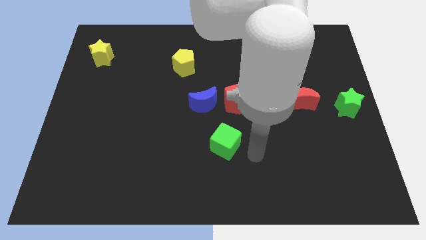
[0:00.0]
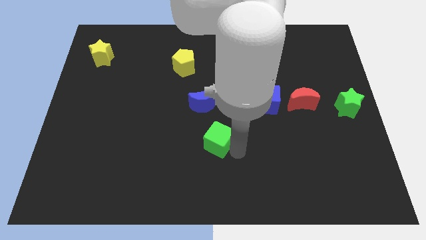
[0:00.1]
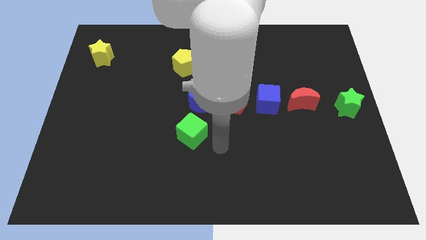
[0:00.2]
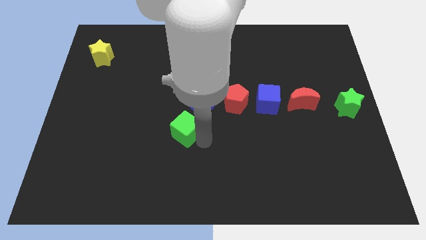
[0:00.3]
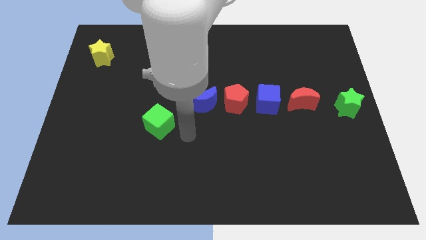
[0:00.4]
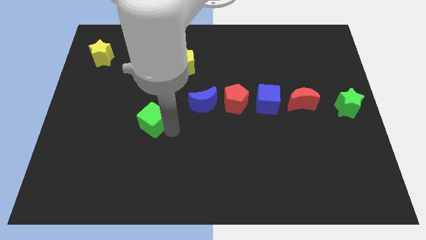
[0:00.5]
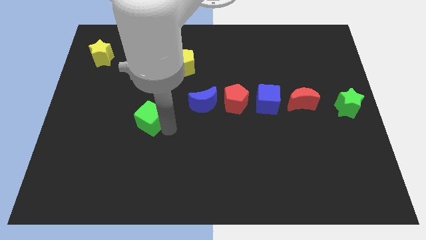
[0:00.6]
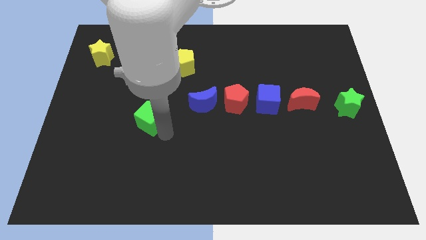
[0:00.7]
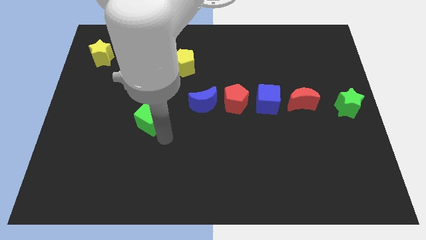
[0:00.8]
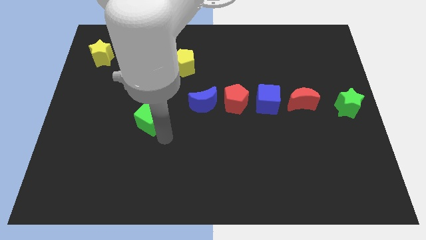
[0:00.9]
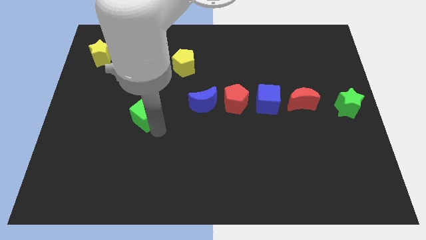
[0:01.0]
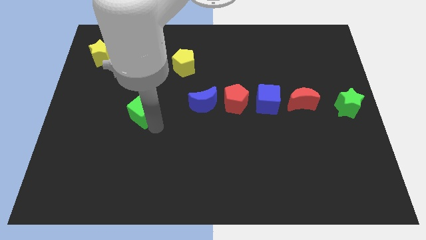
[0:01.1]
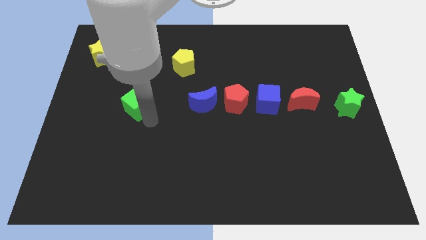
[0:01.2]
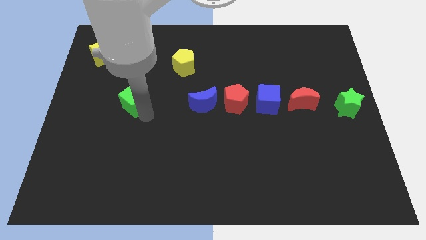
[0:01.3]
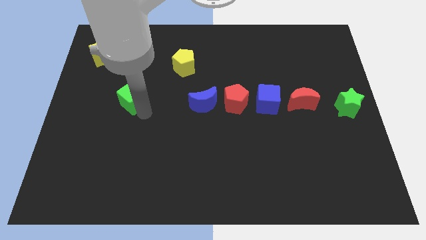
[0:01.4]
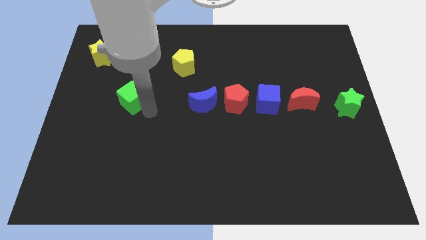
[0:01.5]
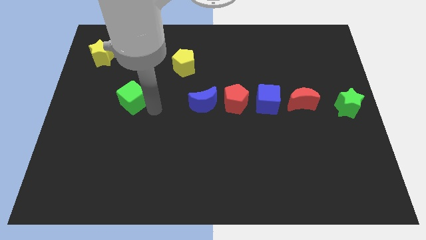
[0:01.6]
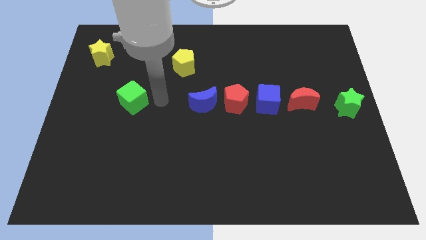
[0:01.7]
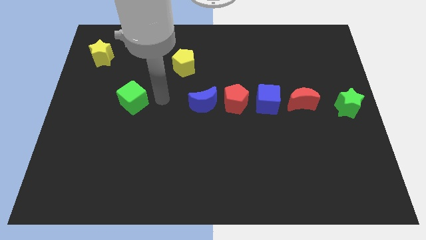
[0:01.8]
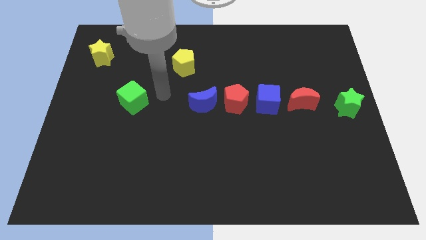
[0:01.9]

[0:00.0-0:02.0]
move the green cube to the left of the blue moon

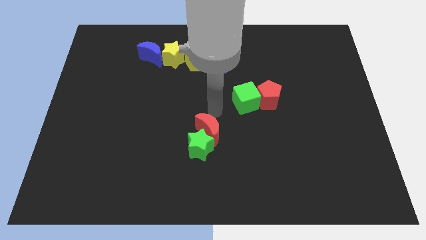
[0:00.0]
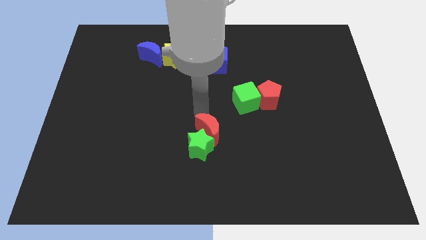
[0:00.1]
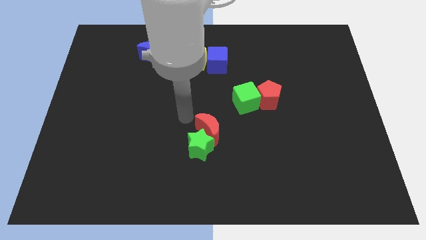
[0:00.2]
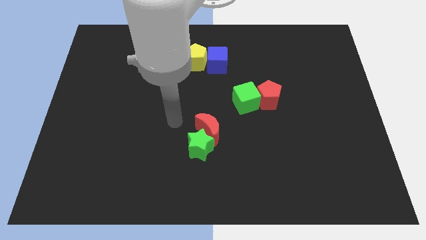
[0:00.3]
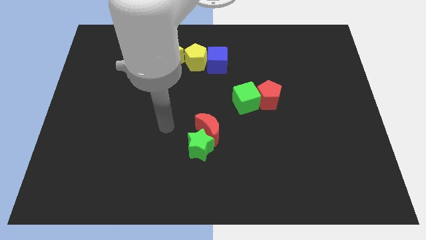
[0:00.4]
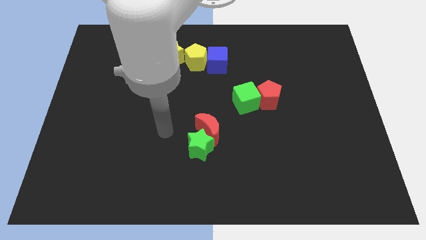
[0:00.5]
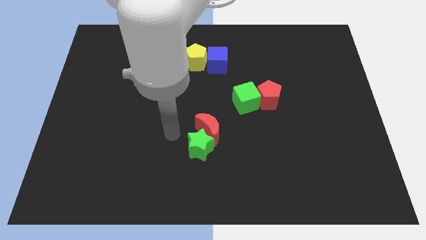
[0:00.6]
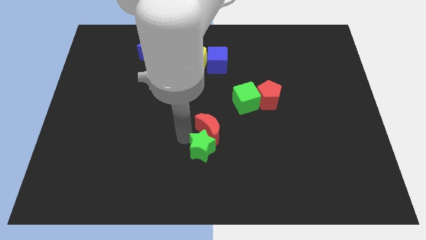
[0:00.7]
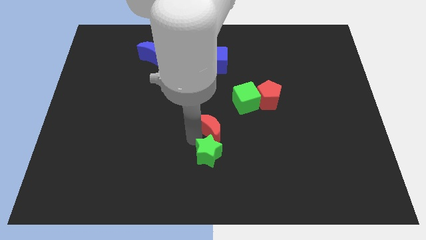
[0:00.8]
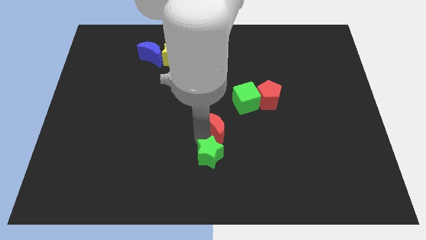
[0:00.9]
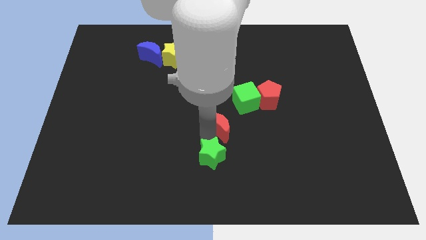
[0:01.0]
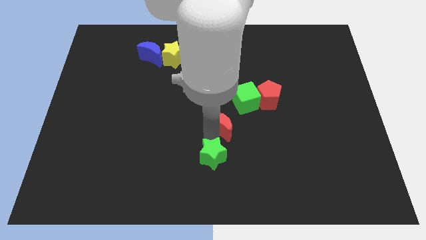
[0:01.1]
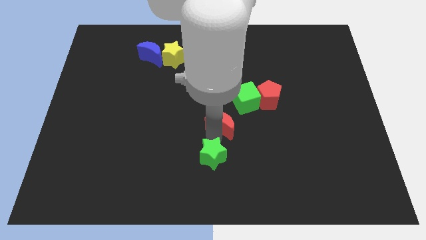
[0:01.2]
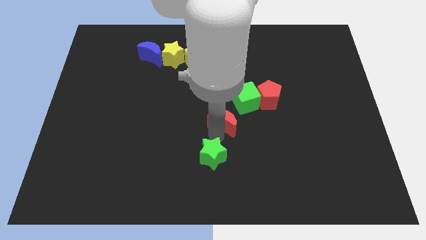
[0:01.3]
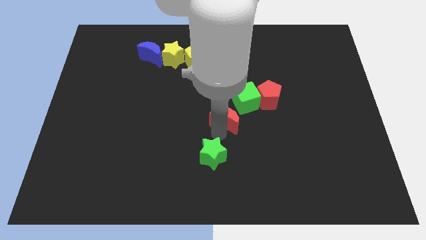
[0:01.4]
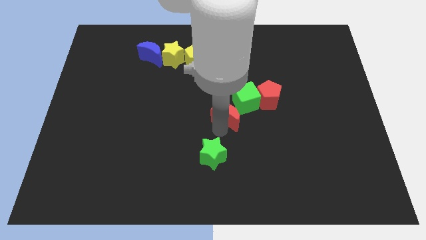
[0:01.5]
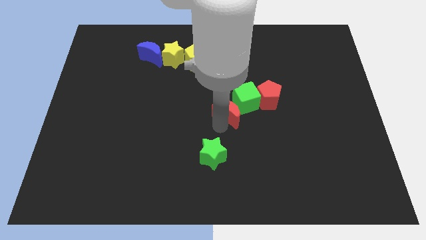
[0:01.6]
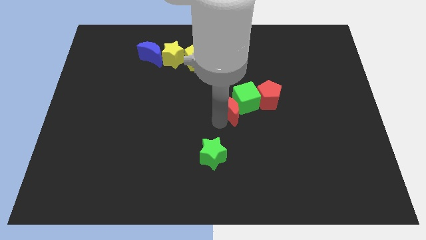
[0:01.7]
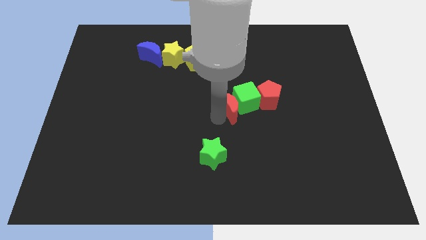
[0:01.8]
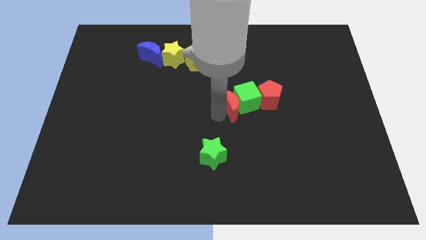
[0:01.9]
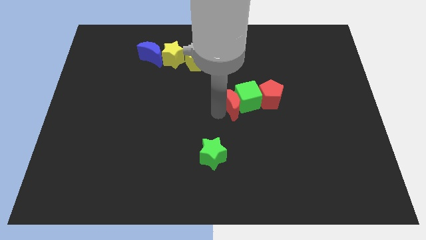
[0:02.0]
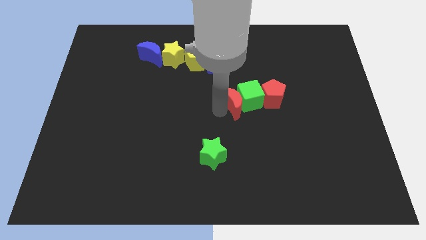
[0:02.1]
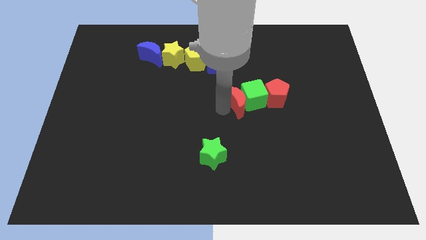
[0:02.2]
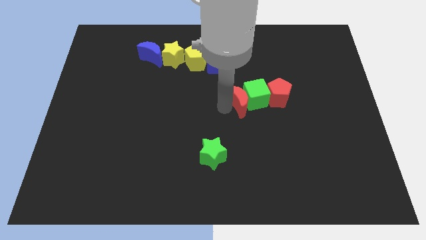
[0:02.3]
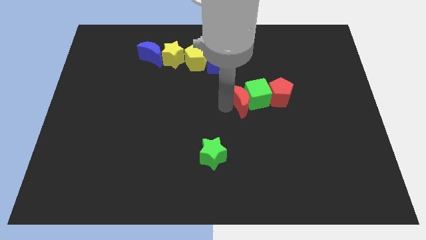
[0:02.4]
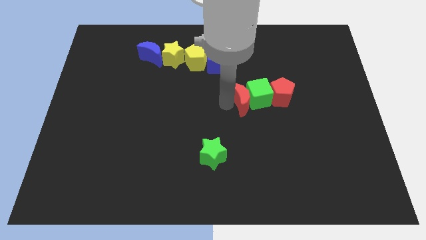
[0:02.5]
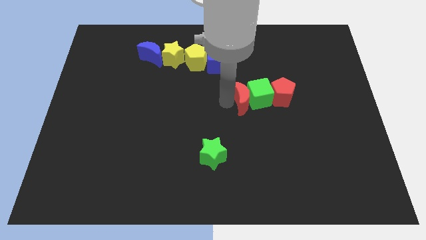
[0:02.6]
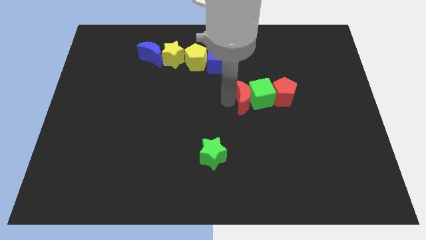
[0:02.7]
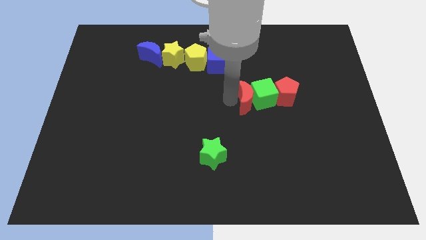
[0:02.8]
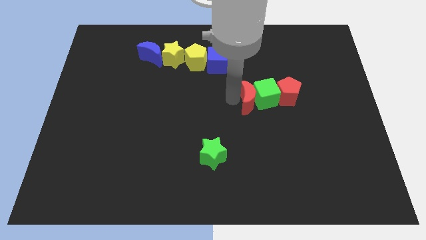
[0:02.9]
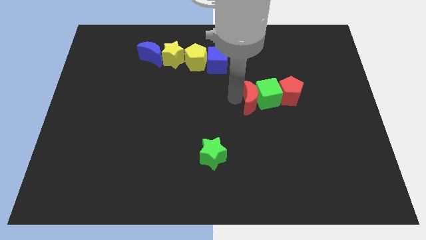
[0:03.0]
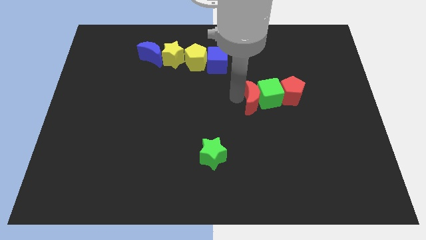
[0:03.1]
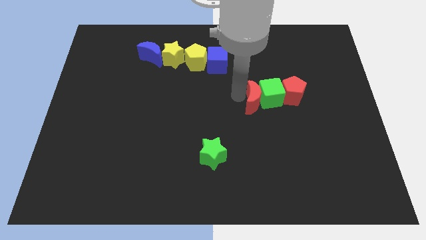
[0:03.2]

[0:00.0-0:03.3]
separate the red crescent from green cube

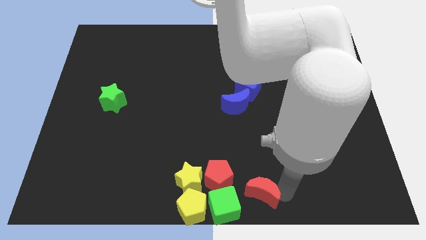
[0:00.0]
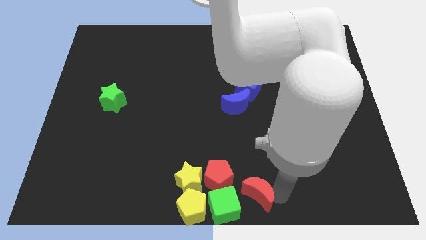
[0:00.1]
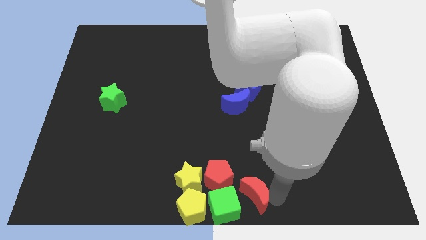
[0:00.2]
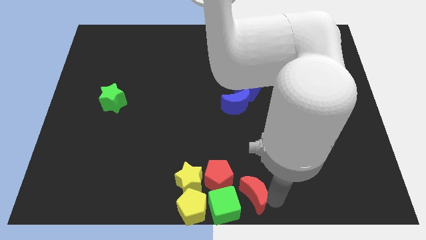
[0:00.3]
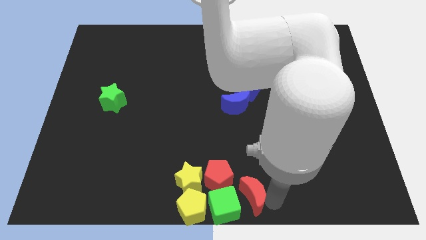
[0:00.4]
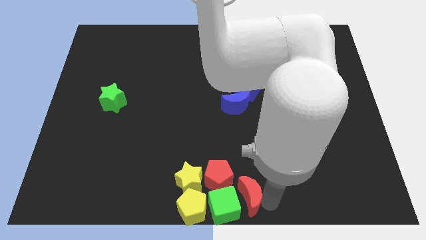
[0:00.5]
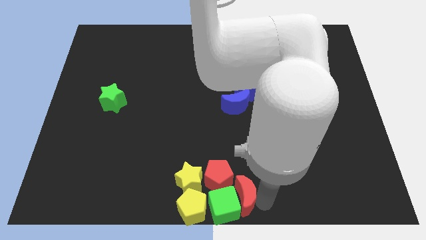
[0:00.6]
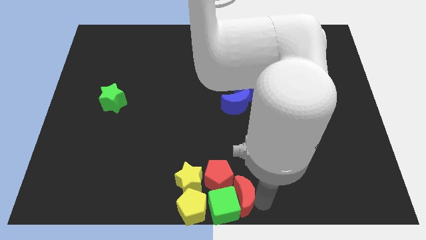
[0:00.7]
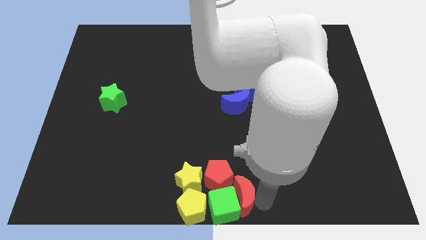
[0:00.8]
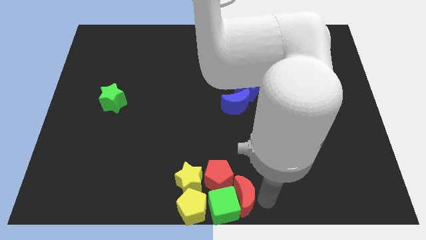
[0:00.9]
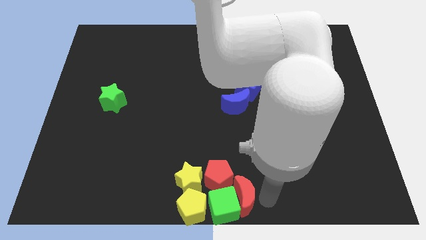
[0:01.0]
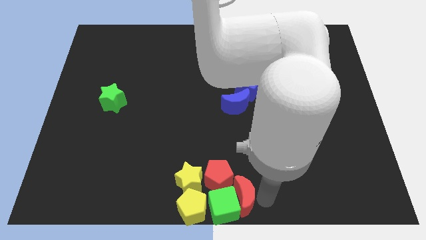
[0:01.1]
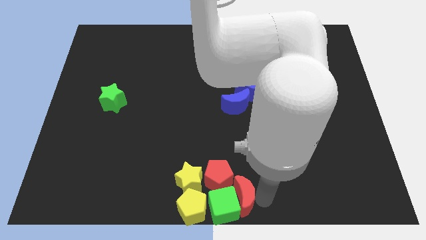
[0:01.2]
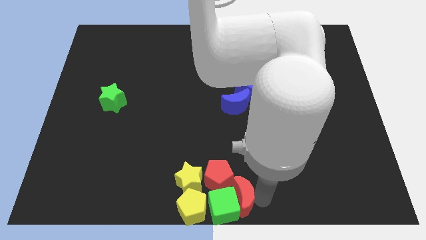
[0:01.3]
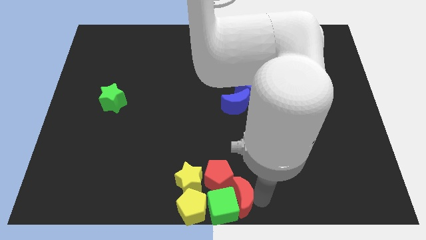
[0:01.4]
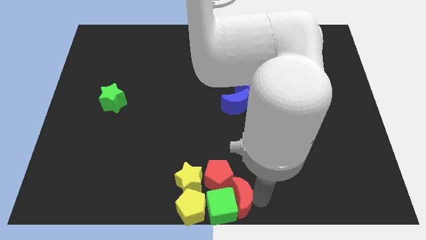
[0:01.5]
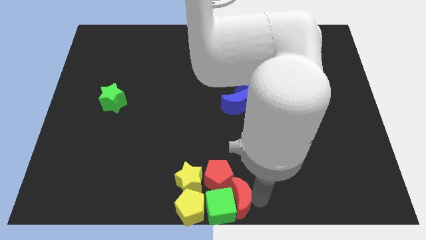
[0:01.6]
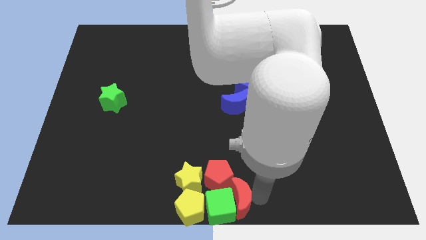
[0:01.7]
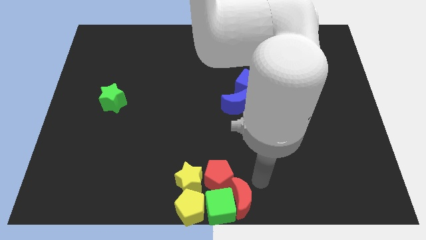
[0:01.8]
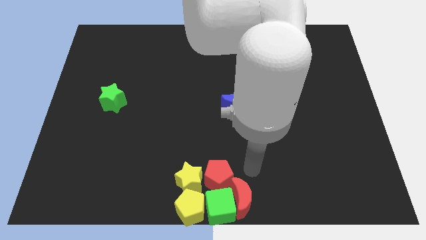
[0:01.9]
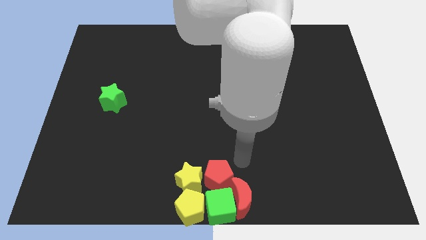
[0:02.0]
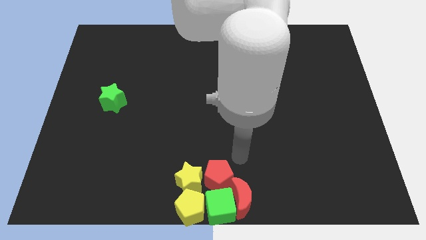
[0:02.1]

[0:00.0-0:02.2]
push the red crescent in to the green cube

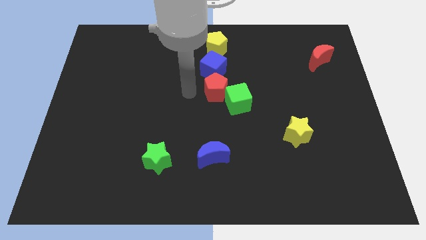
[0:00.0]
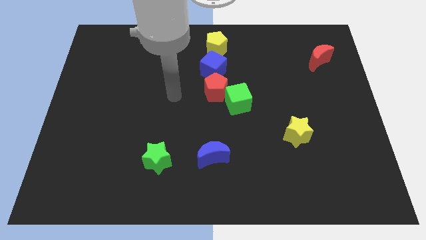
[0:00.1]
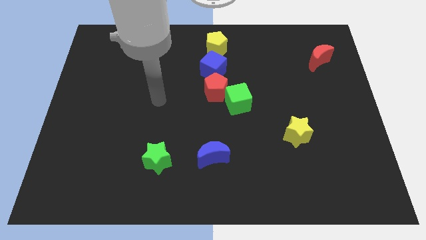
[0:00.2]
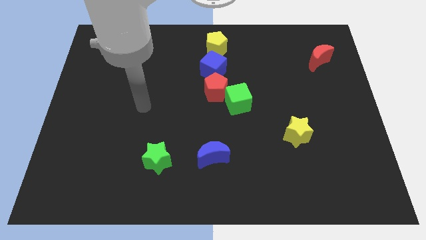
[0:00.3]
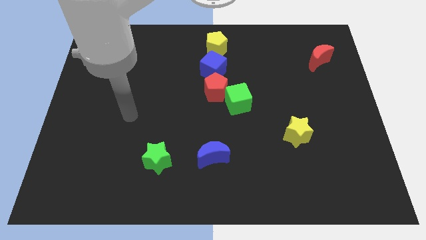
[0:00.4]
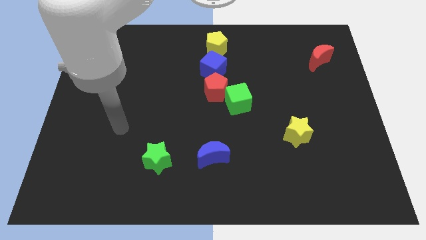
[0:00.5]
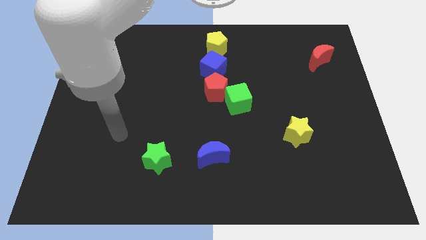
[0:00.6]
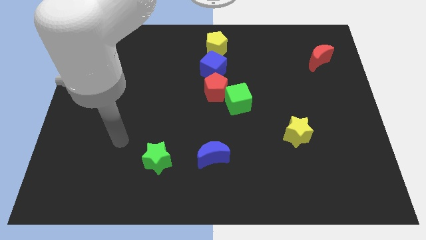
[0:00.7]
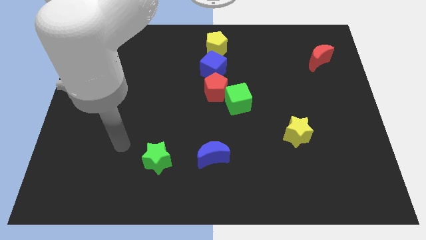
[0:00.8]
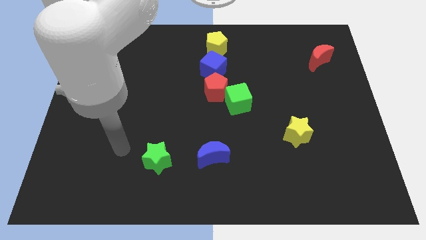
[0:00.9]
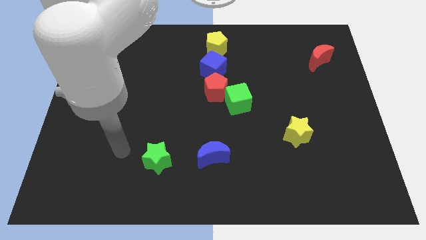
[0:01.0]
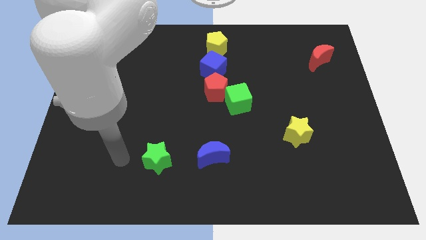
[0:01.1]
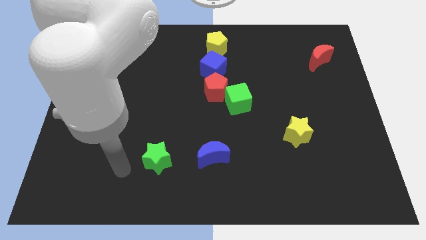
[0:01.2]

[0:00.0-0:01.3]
place your hand to left side of the green star
